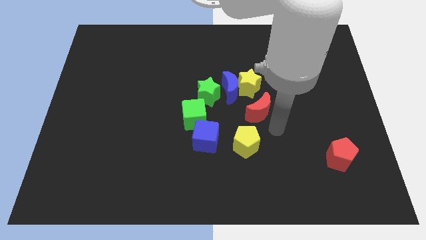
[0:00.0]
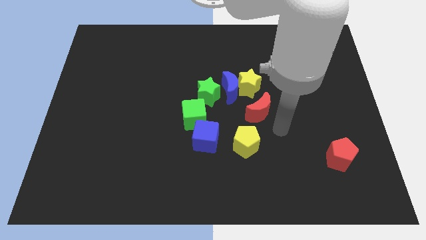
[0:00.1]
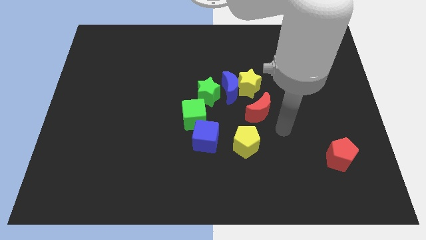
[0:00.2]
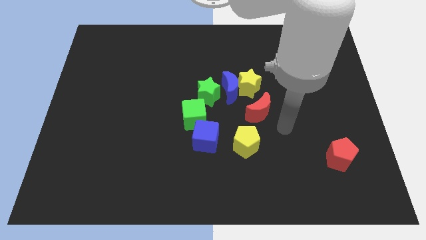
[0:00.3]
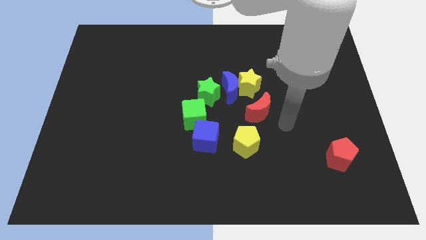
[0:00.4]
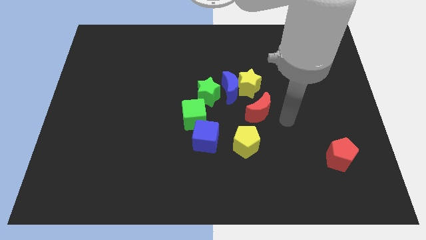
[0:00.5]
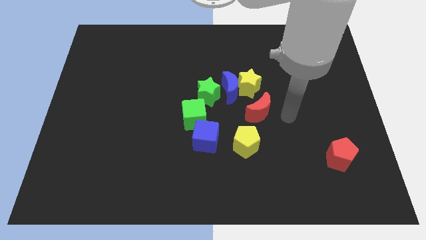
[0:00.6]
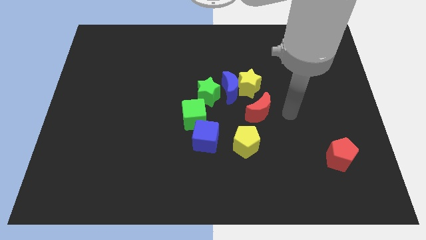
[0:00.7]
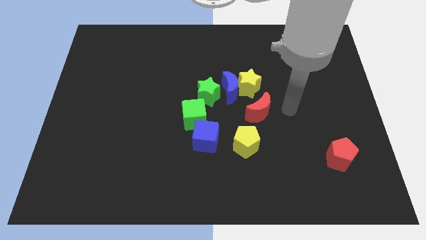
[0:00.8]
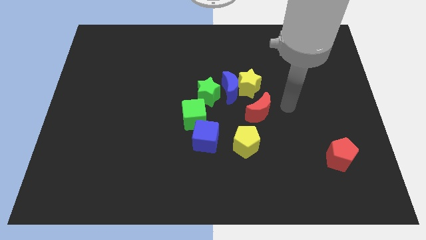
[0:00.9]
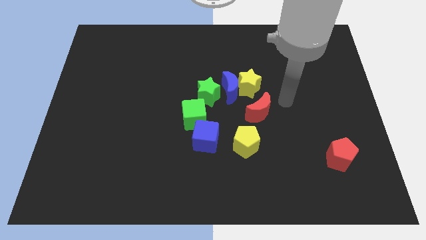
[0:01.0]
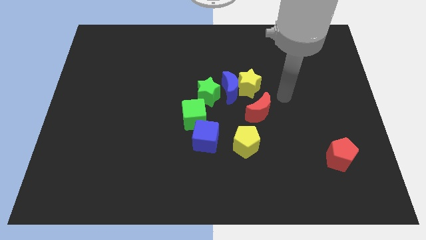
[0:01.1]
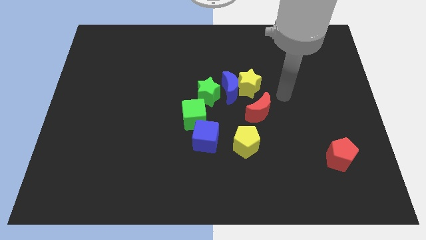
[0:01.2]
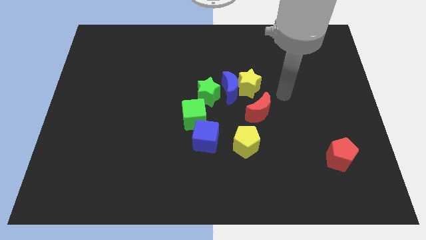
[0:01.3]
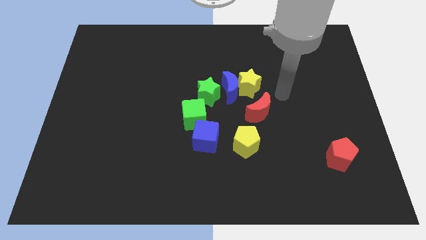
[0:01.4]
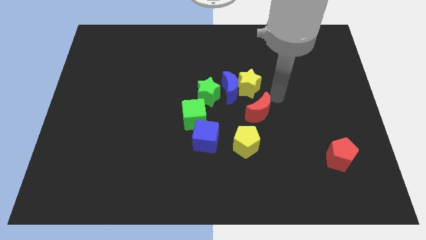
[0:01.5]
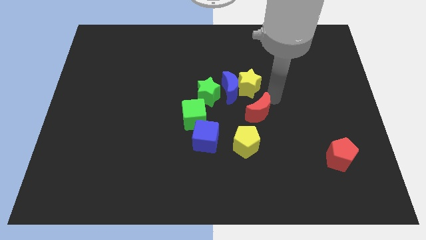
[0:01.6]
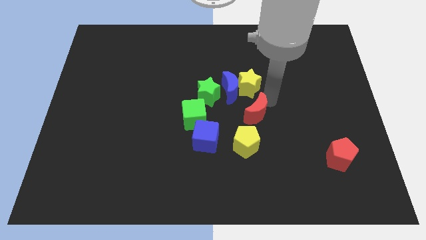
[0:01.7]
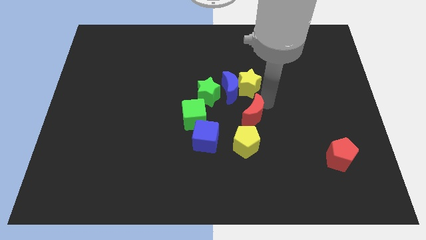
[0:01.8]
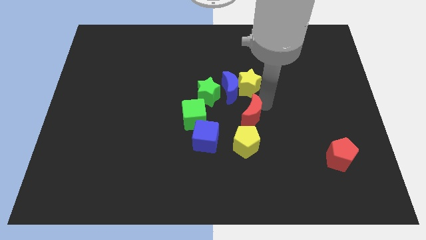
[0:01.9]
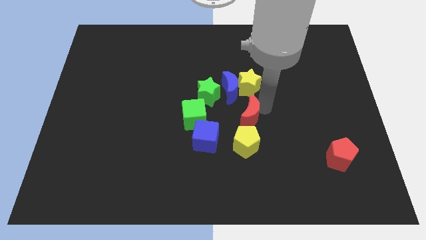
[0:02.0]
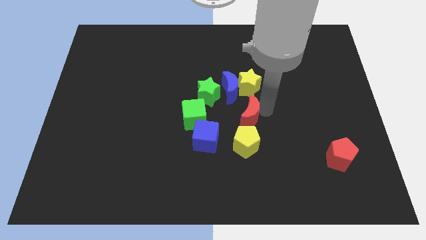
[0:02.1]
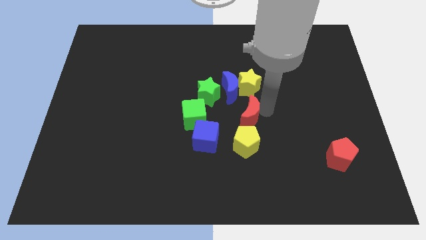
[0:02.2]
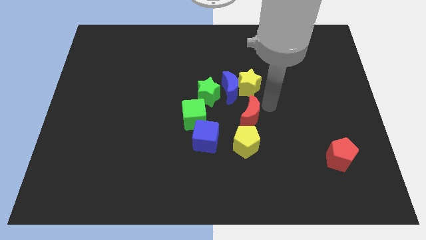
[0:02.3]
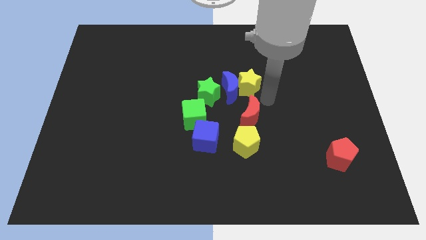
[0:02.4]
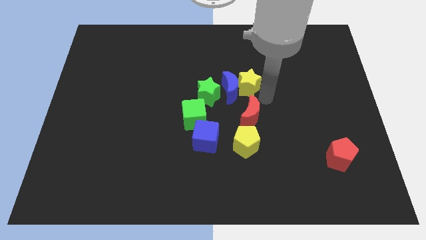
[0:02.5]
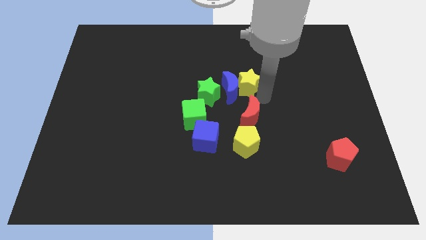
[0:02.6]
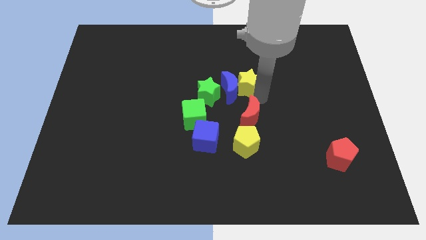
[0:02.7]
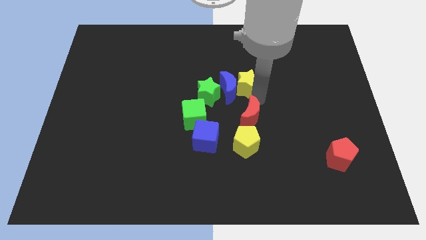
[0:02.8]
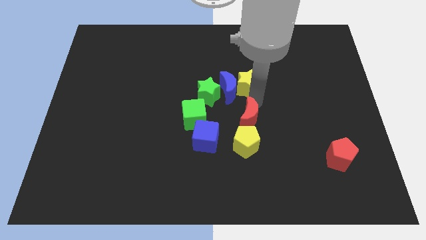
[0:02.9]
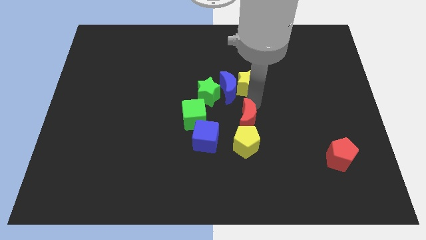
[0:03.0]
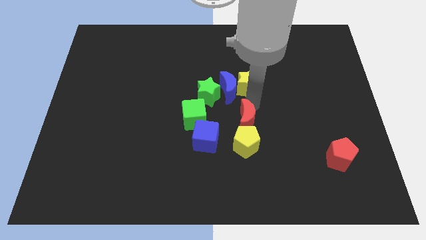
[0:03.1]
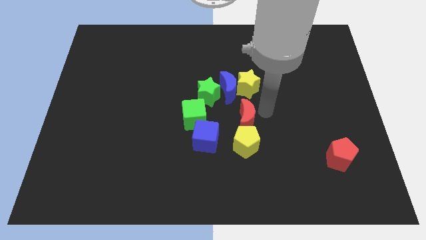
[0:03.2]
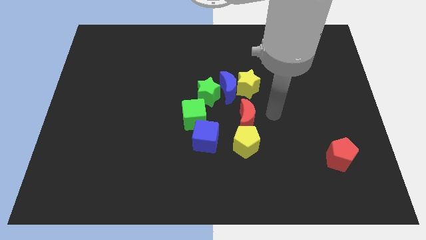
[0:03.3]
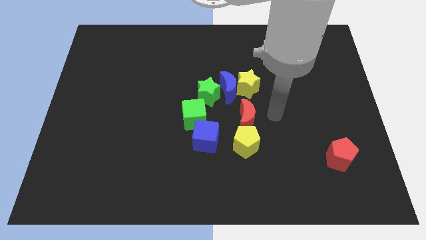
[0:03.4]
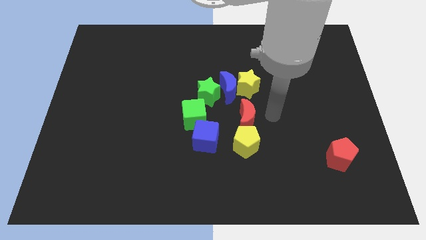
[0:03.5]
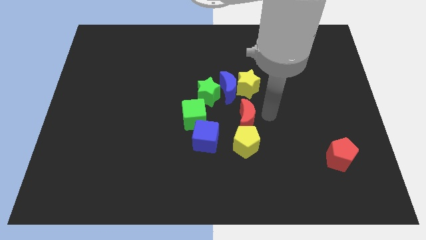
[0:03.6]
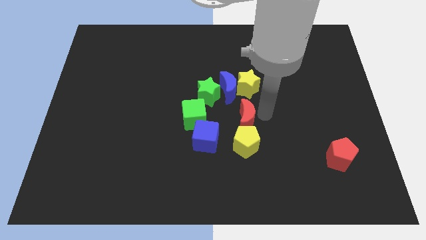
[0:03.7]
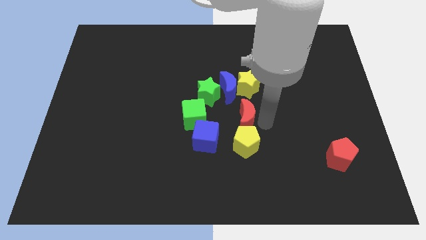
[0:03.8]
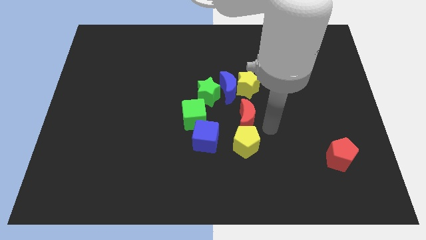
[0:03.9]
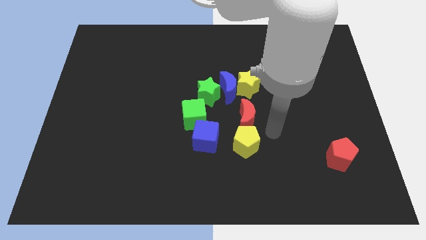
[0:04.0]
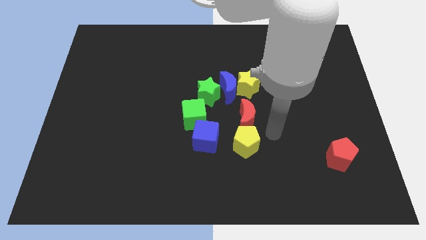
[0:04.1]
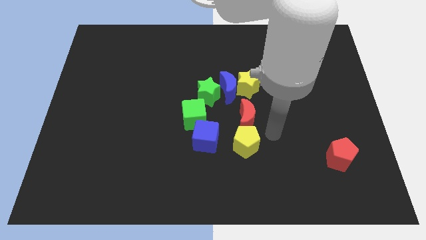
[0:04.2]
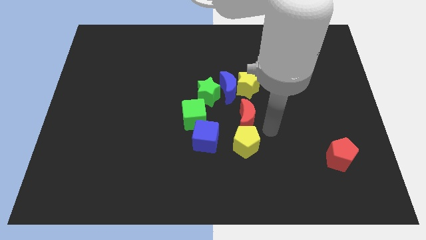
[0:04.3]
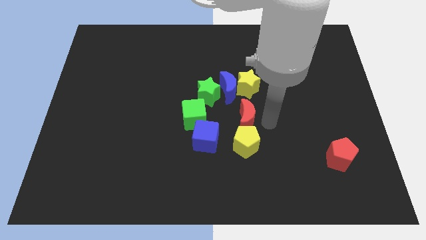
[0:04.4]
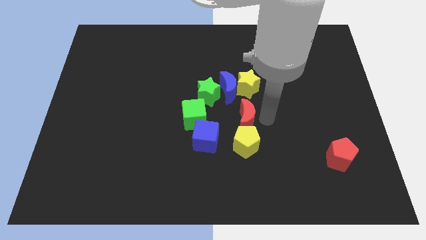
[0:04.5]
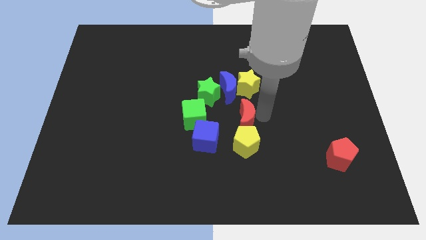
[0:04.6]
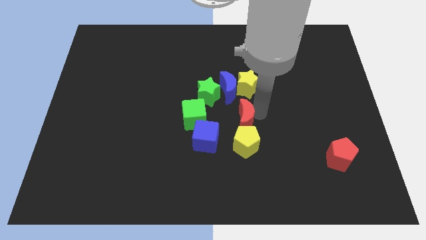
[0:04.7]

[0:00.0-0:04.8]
place the red moon between the yellow star and pentagon

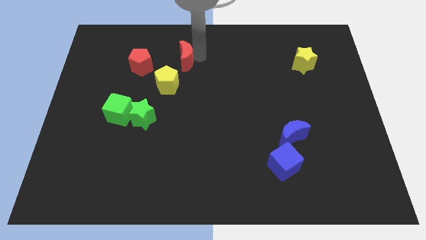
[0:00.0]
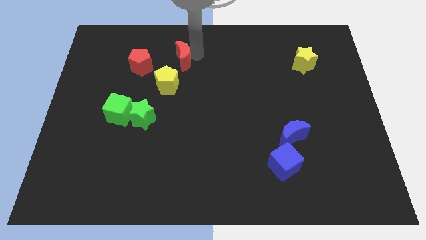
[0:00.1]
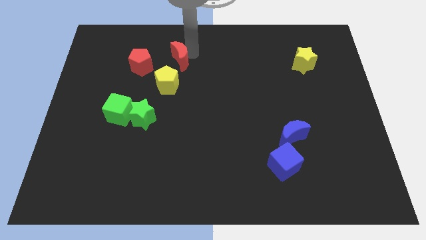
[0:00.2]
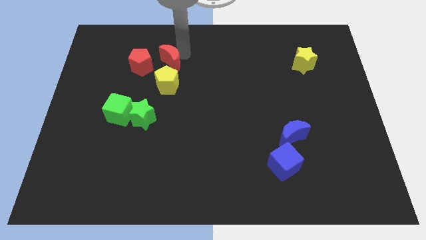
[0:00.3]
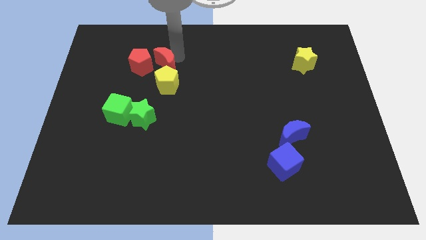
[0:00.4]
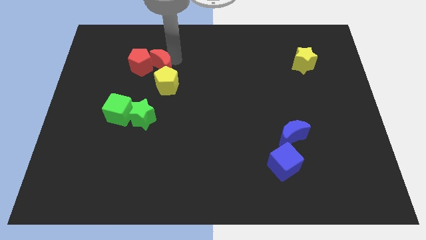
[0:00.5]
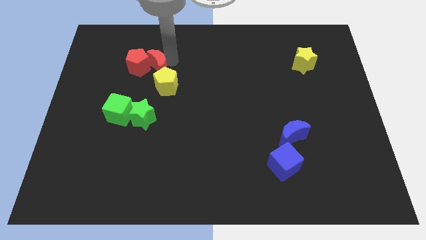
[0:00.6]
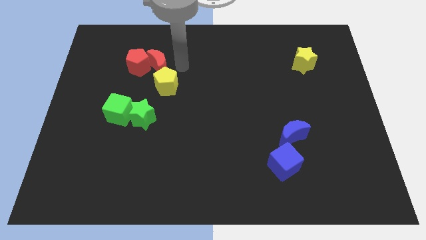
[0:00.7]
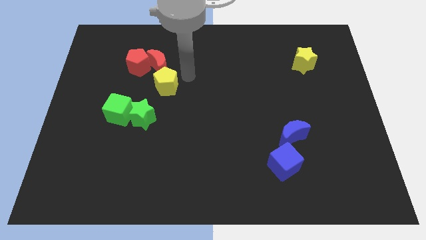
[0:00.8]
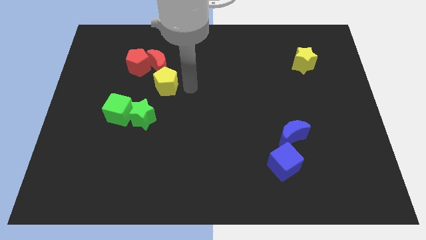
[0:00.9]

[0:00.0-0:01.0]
push the red crescent into the red pentagon and yellow pentagon

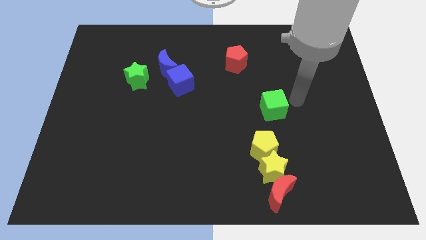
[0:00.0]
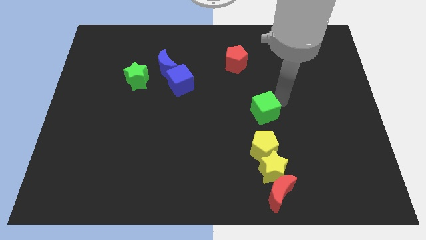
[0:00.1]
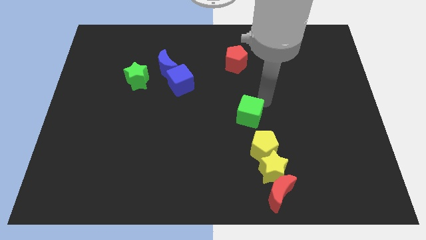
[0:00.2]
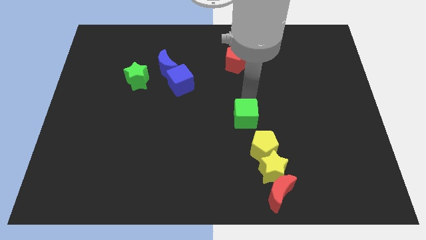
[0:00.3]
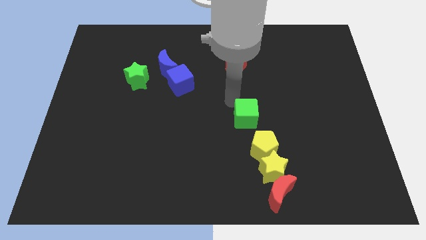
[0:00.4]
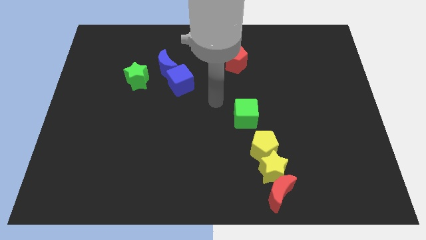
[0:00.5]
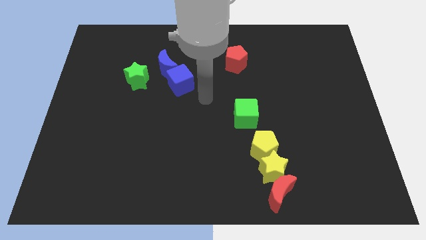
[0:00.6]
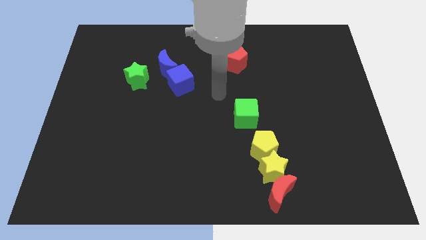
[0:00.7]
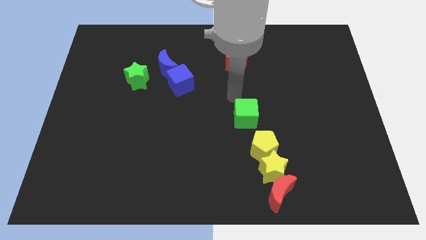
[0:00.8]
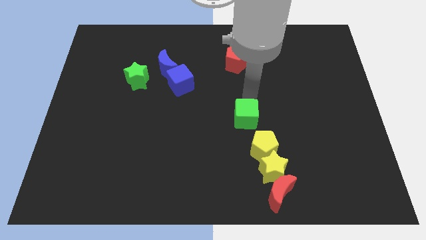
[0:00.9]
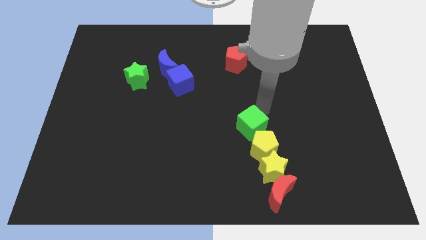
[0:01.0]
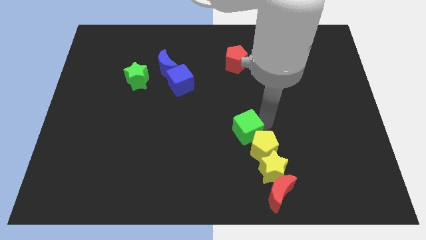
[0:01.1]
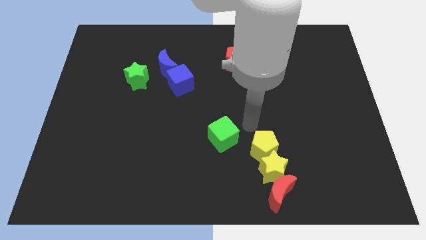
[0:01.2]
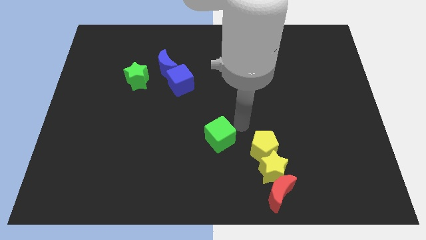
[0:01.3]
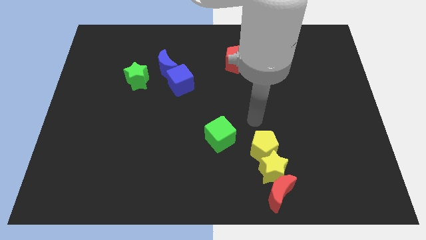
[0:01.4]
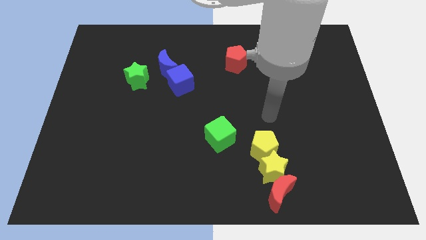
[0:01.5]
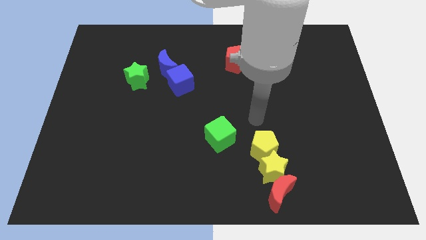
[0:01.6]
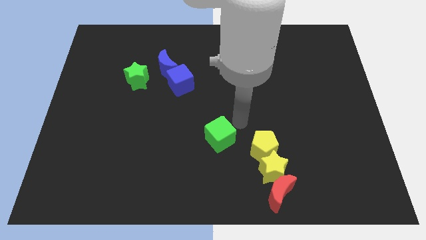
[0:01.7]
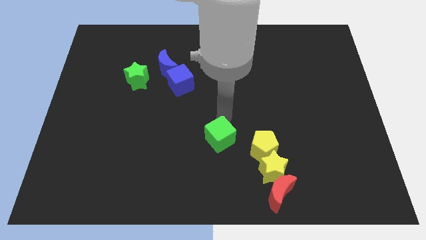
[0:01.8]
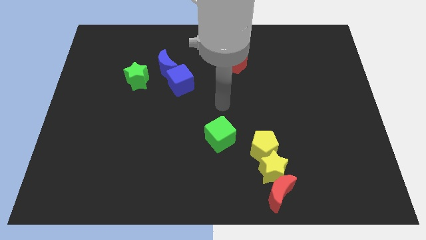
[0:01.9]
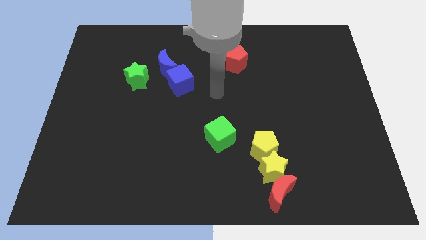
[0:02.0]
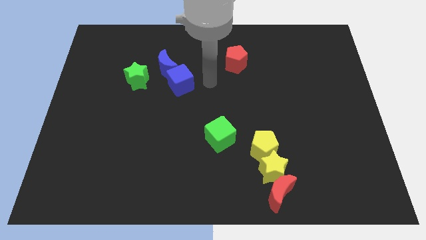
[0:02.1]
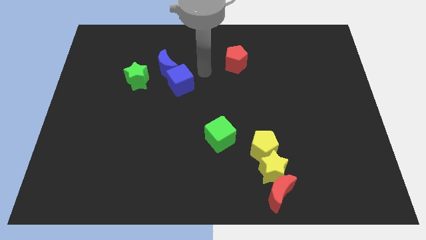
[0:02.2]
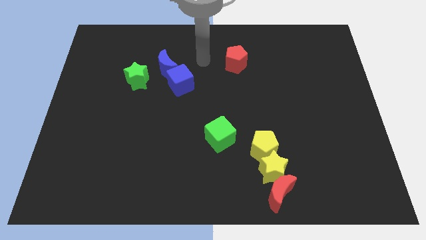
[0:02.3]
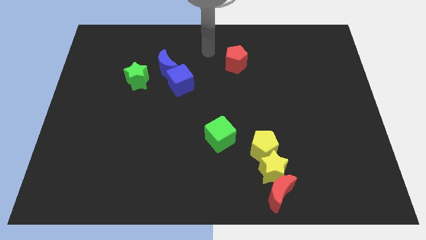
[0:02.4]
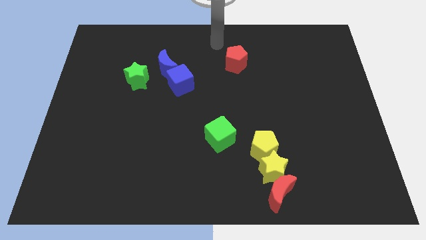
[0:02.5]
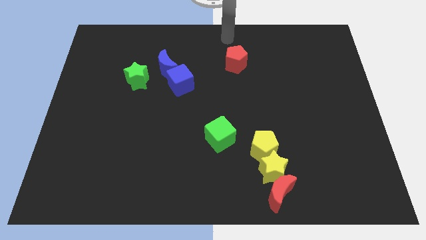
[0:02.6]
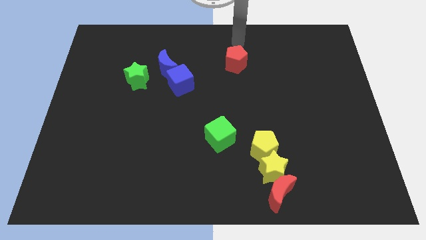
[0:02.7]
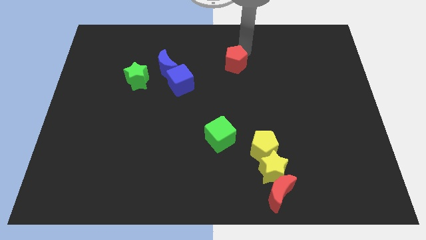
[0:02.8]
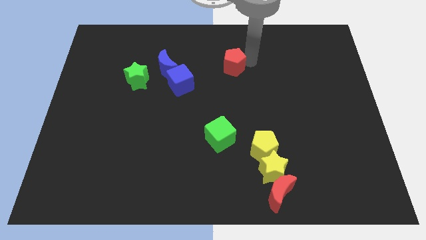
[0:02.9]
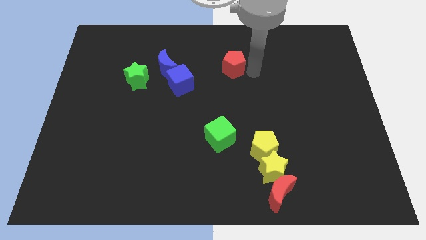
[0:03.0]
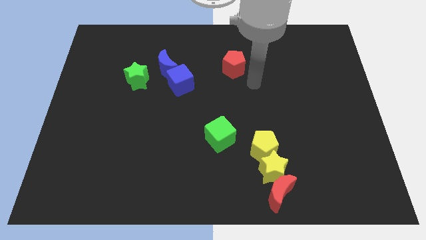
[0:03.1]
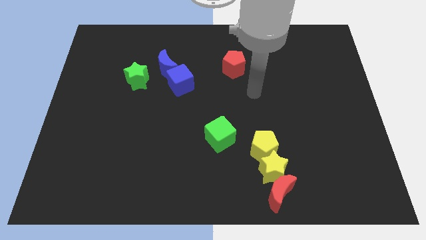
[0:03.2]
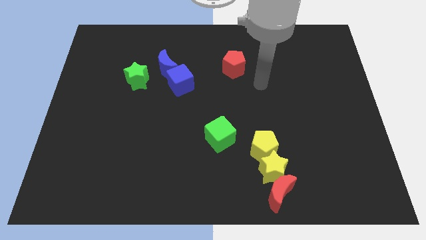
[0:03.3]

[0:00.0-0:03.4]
move the red pentagon parallel to the right of the blue cube
